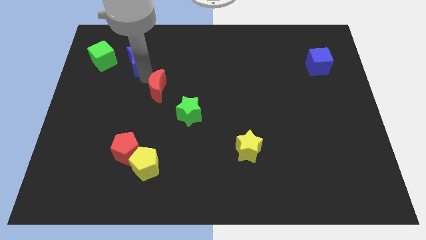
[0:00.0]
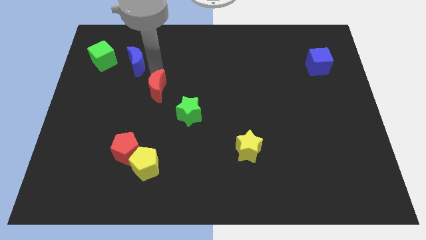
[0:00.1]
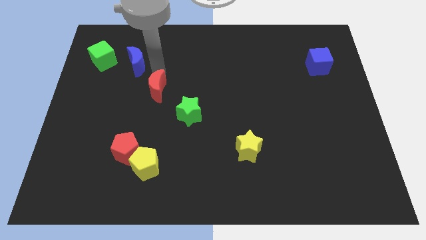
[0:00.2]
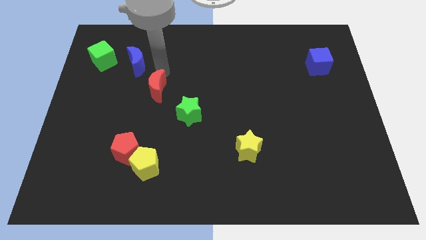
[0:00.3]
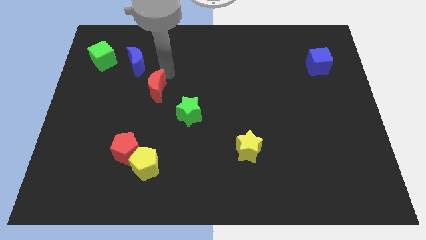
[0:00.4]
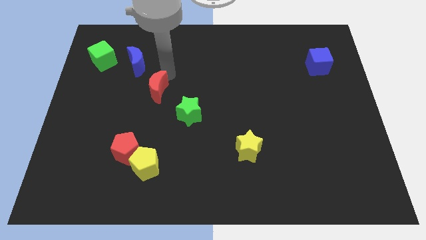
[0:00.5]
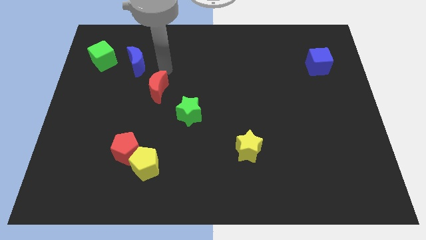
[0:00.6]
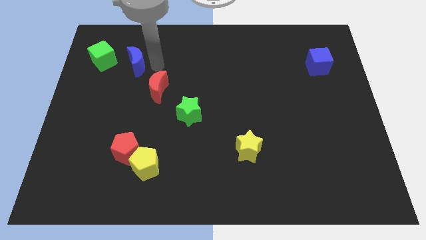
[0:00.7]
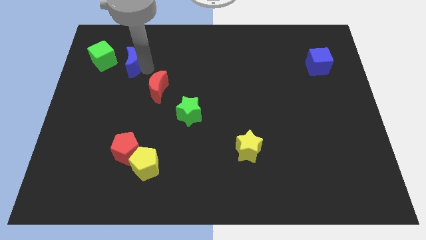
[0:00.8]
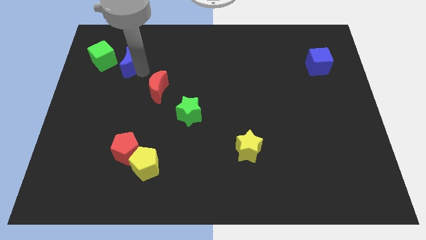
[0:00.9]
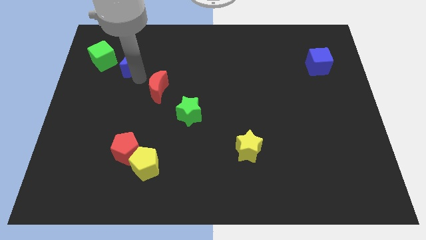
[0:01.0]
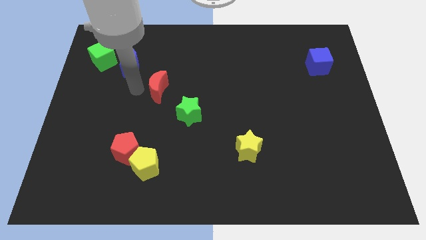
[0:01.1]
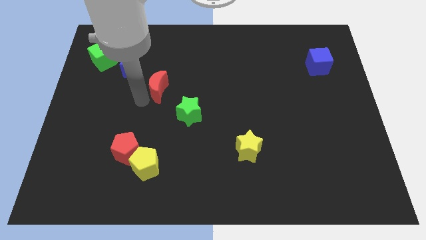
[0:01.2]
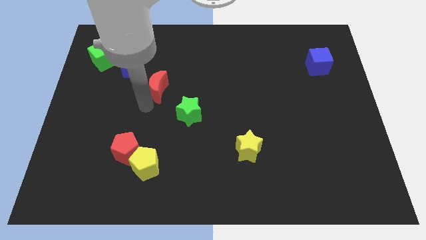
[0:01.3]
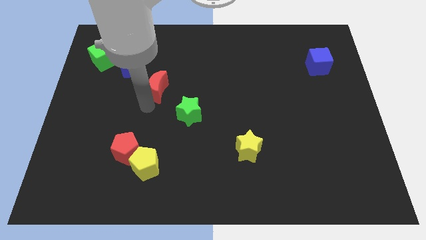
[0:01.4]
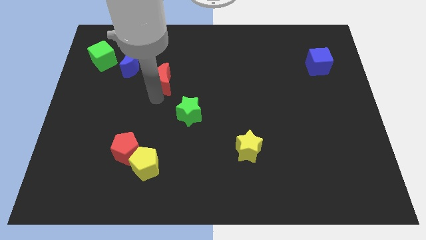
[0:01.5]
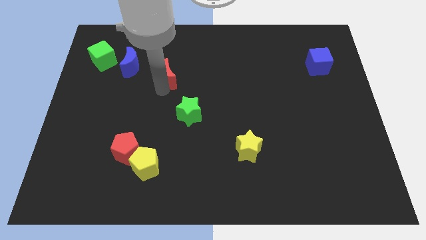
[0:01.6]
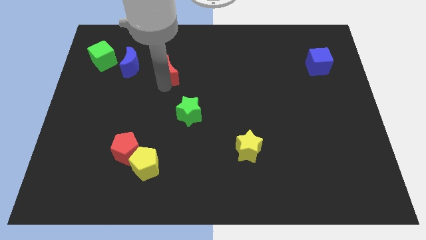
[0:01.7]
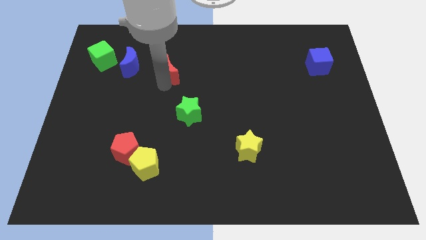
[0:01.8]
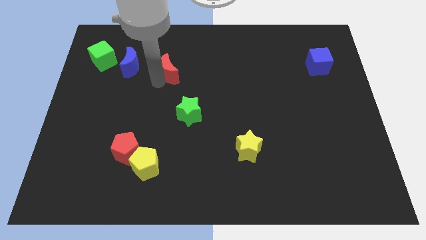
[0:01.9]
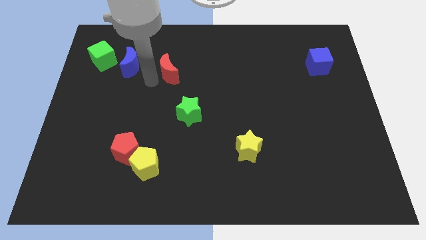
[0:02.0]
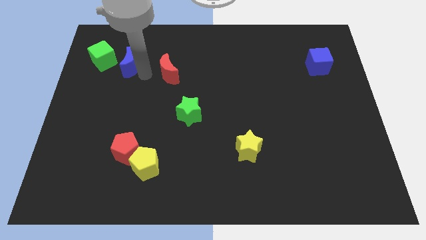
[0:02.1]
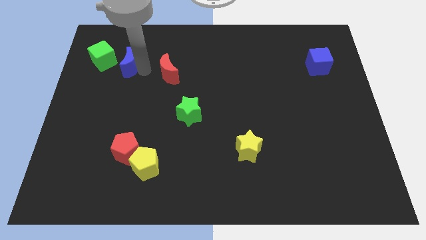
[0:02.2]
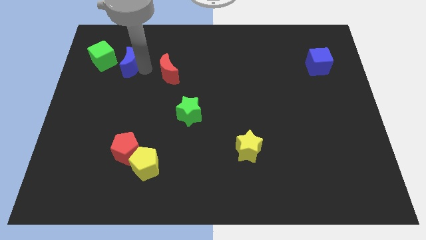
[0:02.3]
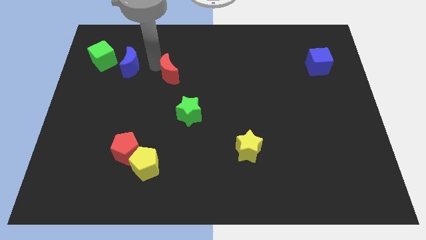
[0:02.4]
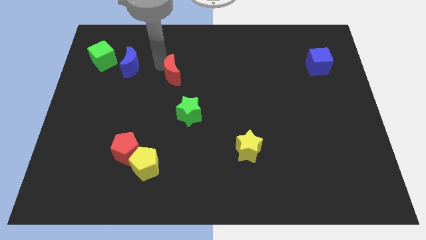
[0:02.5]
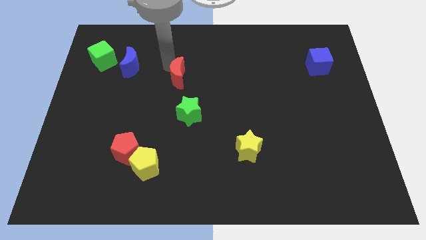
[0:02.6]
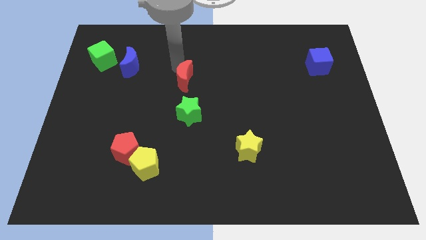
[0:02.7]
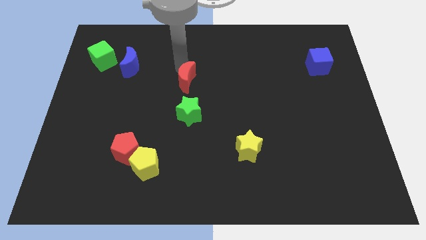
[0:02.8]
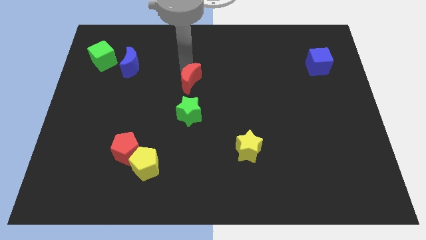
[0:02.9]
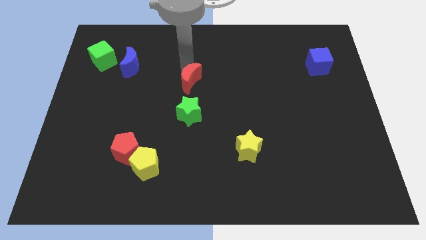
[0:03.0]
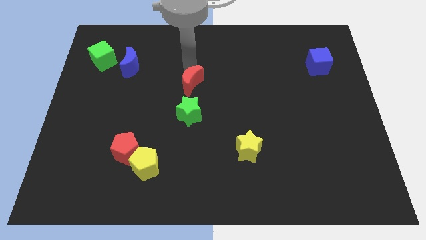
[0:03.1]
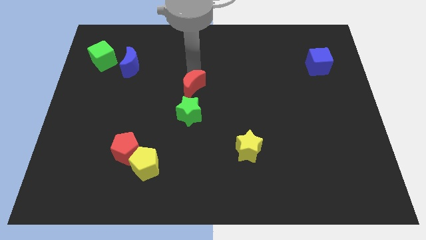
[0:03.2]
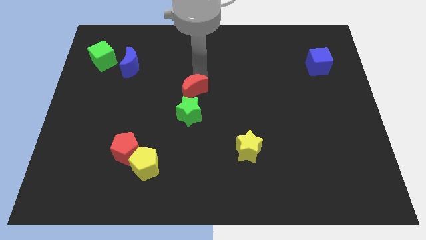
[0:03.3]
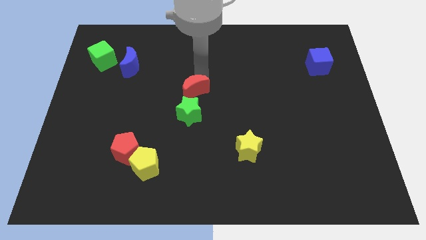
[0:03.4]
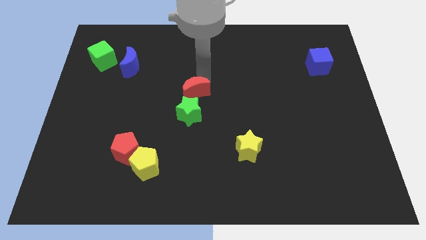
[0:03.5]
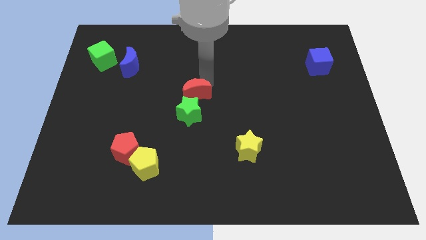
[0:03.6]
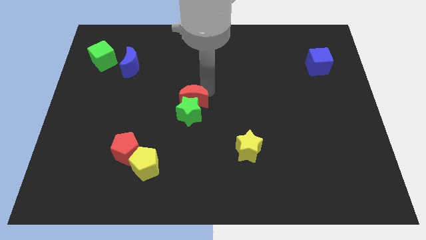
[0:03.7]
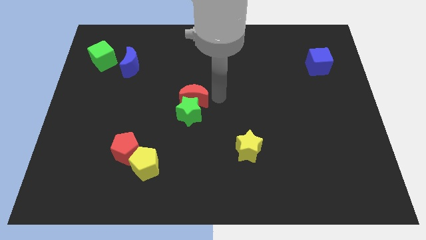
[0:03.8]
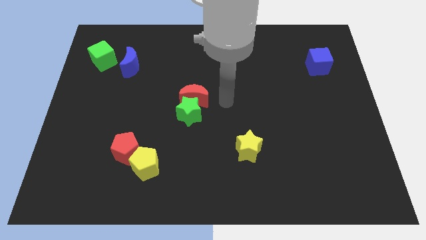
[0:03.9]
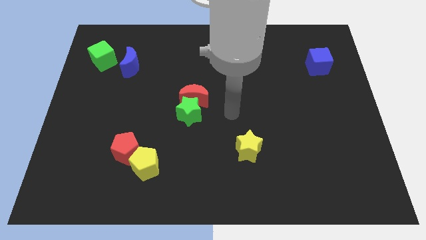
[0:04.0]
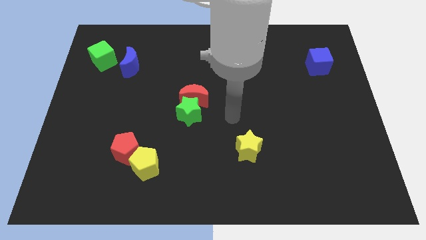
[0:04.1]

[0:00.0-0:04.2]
put the red moon and green star together

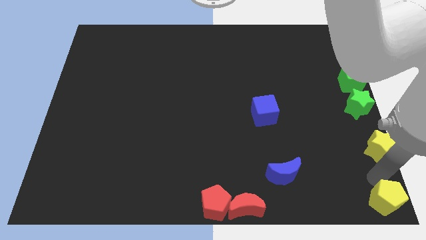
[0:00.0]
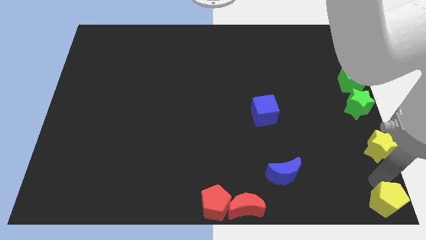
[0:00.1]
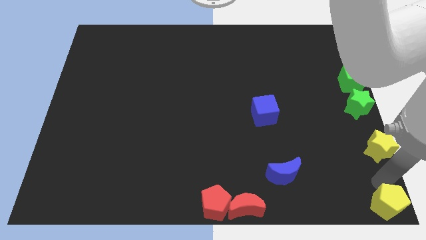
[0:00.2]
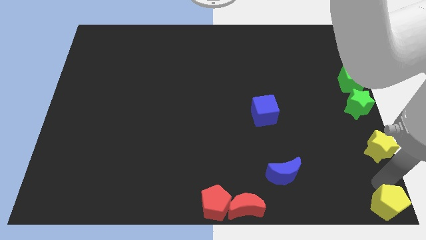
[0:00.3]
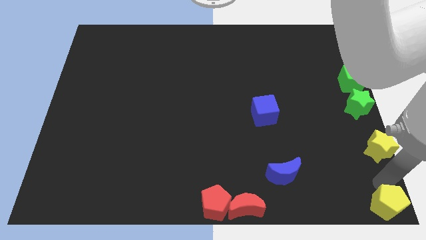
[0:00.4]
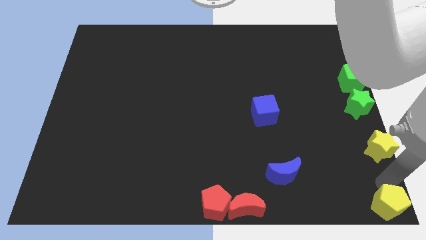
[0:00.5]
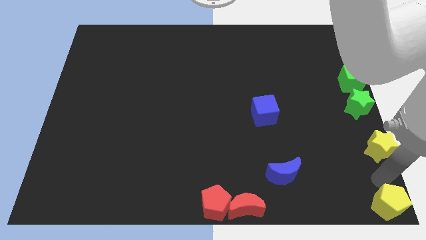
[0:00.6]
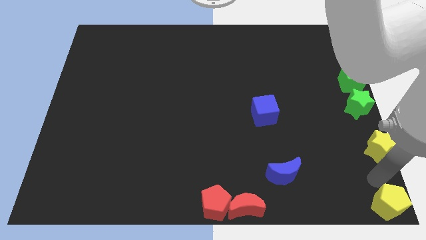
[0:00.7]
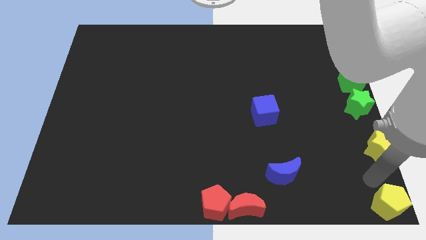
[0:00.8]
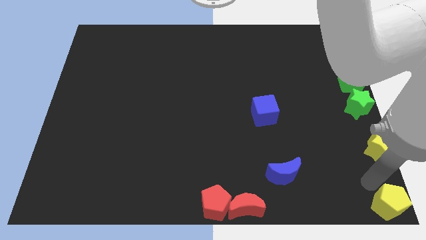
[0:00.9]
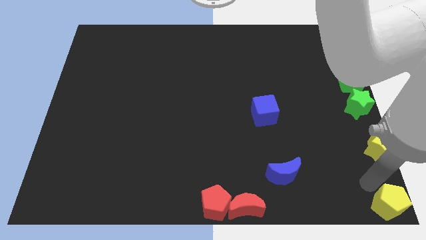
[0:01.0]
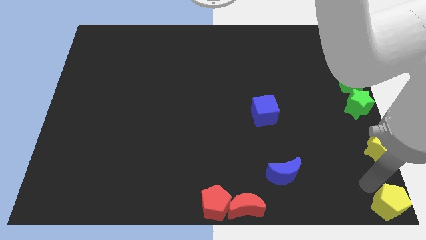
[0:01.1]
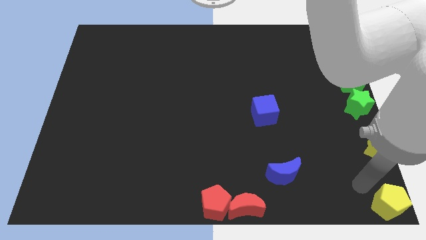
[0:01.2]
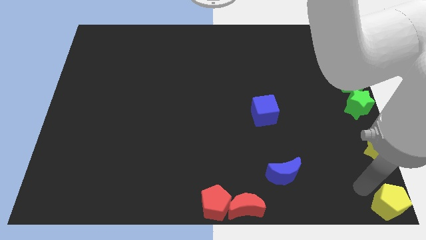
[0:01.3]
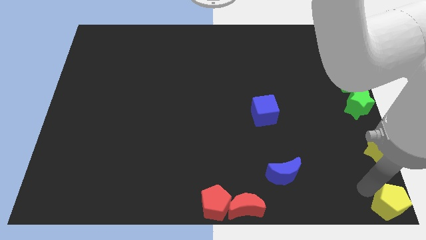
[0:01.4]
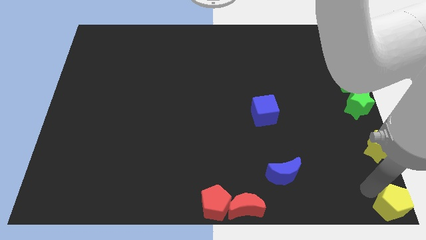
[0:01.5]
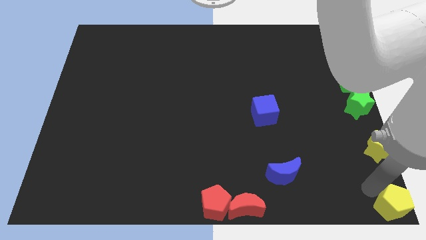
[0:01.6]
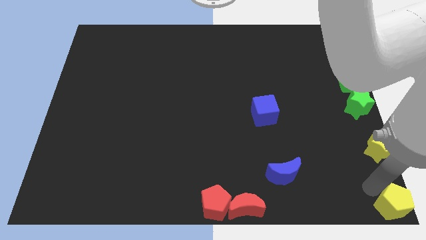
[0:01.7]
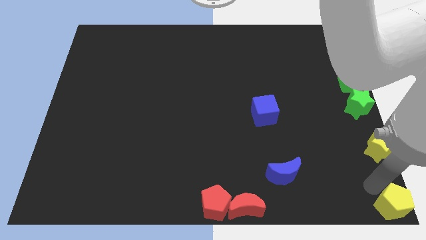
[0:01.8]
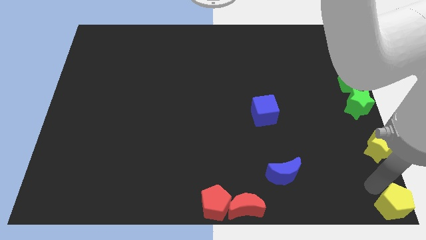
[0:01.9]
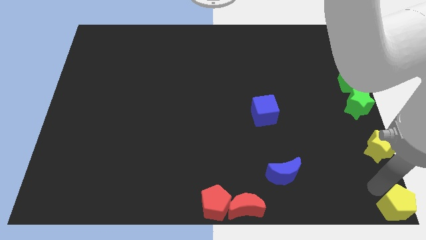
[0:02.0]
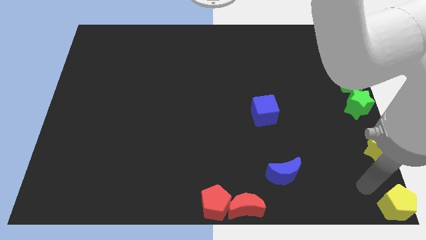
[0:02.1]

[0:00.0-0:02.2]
move the yellow pentagon to the bottom right corner of the board

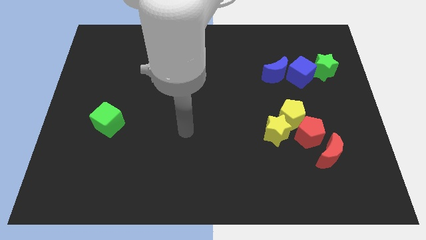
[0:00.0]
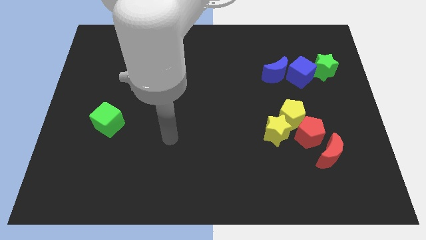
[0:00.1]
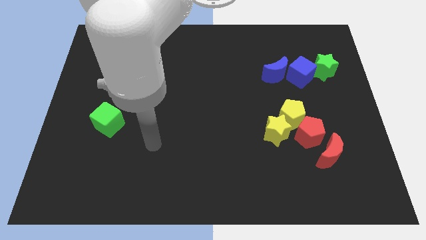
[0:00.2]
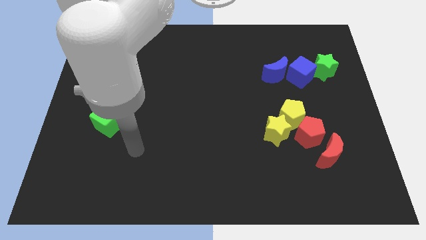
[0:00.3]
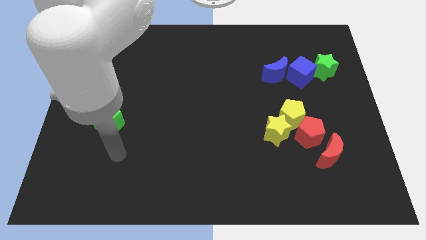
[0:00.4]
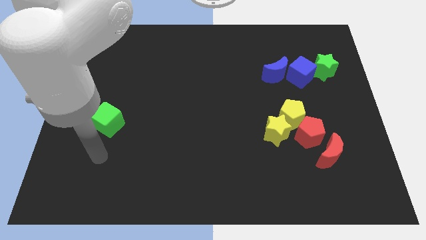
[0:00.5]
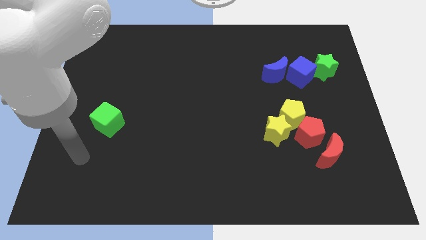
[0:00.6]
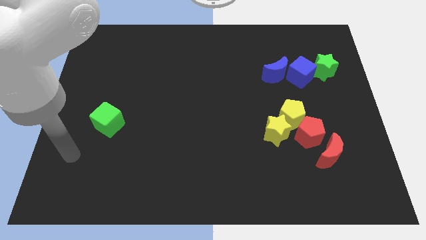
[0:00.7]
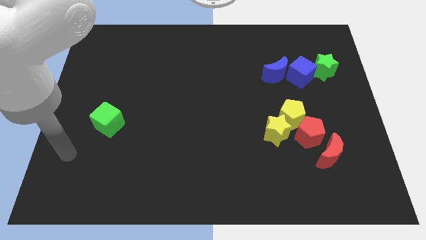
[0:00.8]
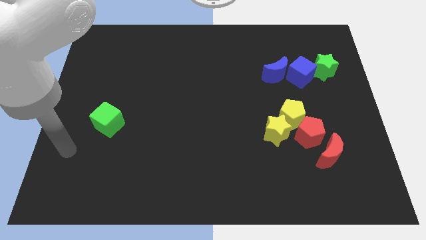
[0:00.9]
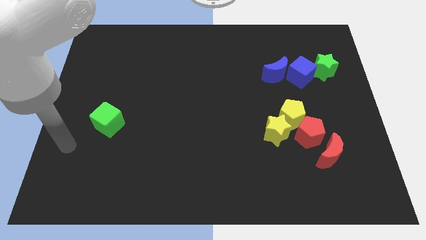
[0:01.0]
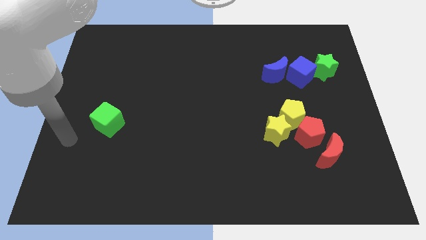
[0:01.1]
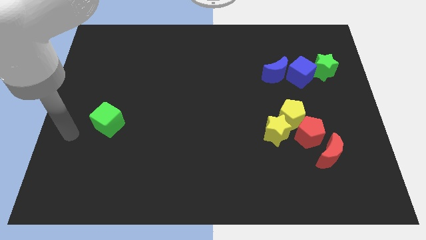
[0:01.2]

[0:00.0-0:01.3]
move your hand towards the center left

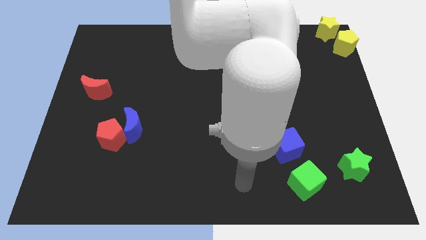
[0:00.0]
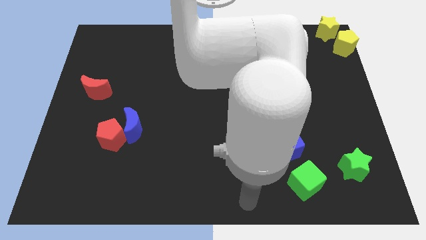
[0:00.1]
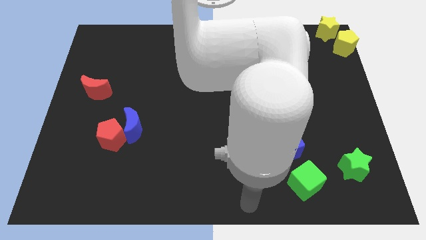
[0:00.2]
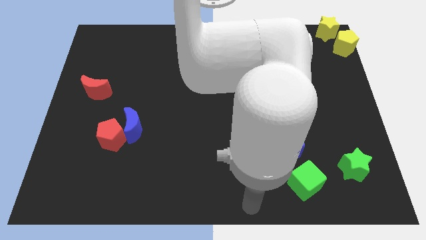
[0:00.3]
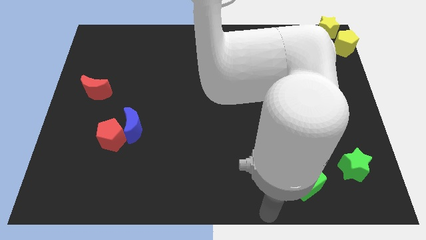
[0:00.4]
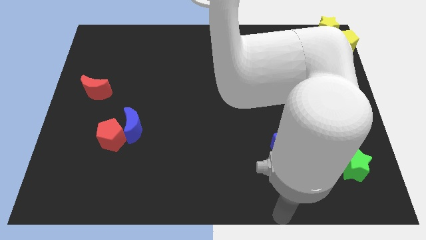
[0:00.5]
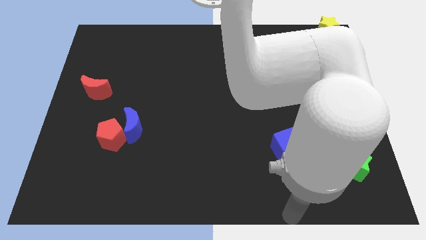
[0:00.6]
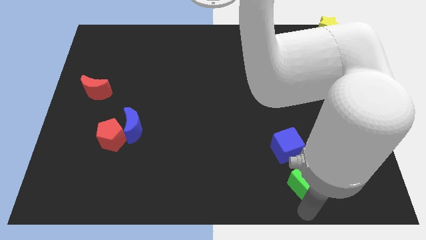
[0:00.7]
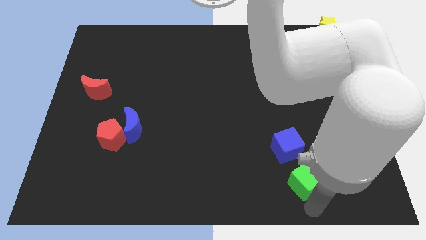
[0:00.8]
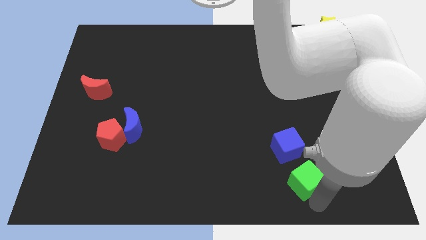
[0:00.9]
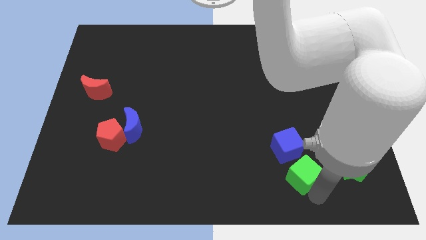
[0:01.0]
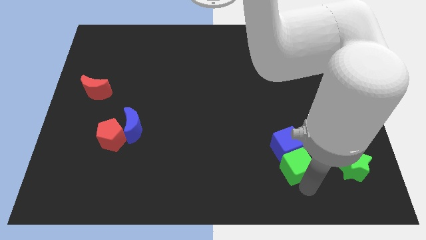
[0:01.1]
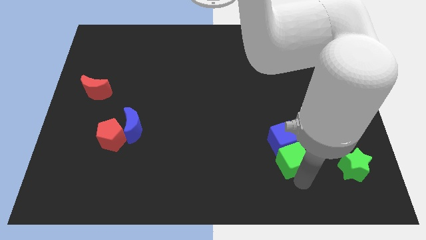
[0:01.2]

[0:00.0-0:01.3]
move green cube into the blue cube
